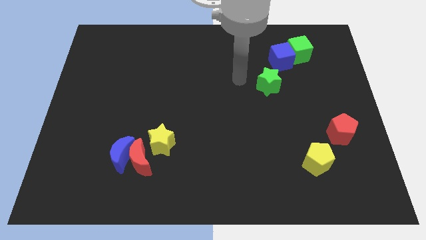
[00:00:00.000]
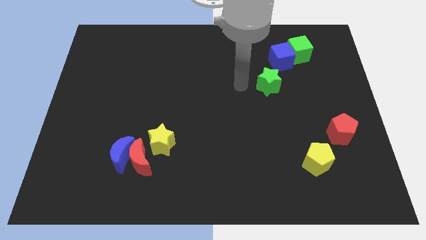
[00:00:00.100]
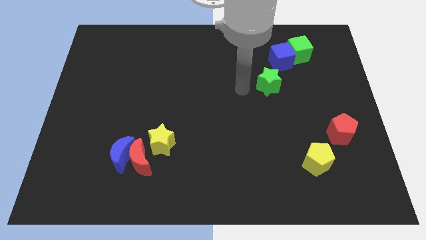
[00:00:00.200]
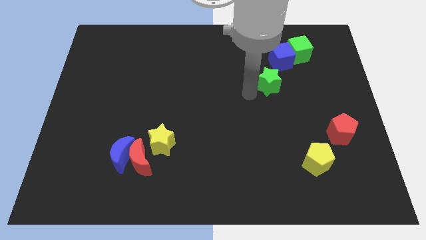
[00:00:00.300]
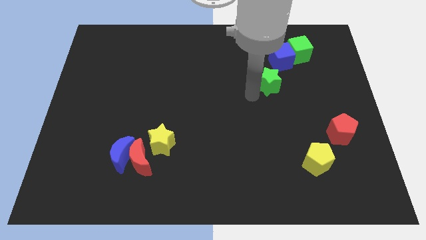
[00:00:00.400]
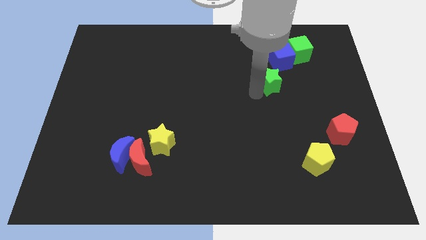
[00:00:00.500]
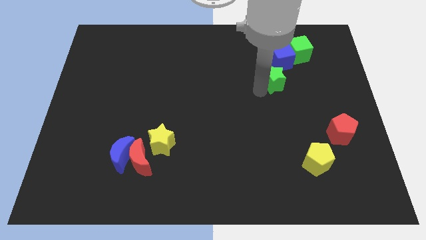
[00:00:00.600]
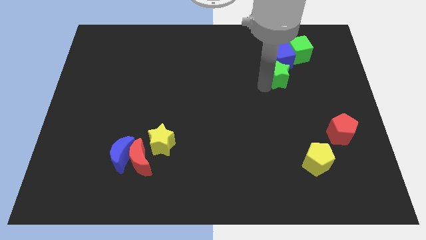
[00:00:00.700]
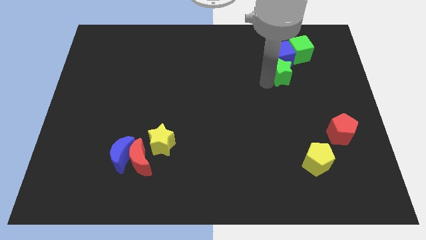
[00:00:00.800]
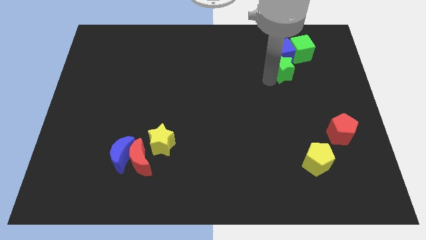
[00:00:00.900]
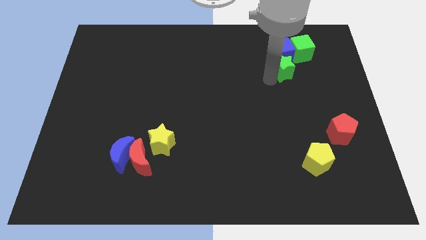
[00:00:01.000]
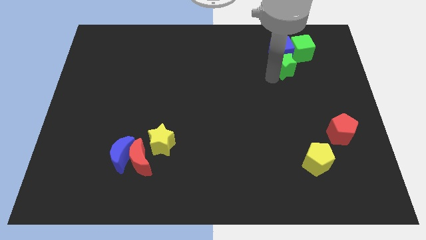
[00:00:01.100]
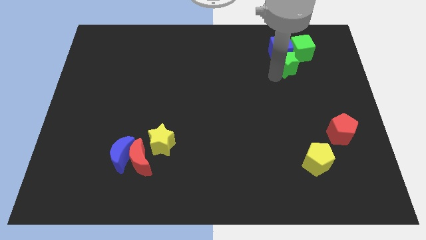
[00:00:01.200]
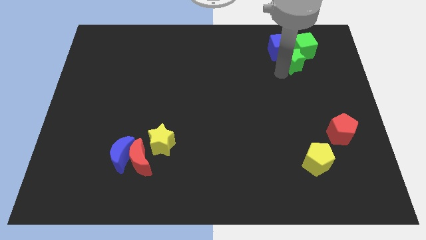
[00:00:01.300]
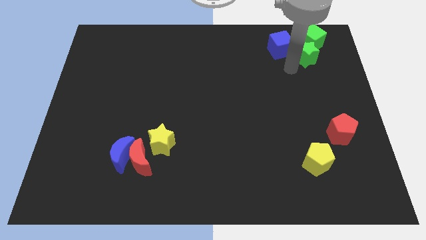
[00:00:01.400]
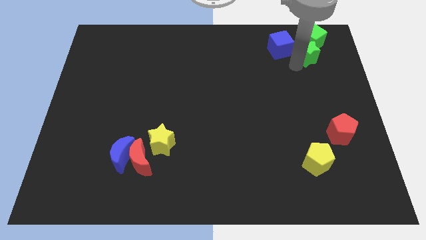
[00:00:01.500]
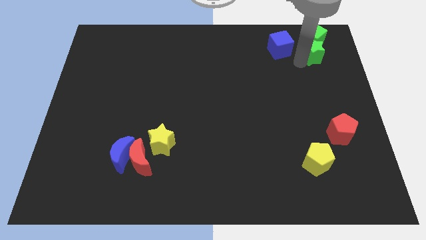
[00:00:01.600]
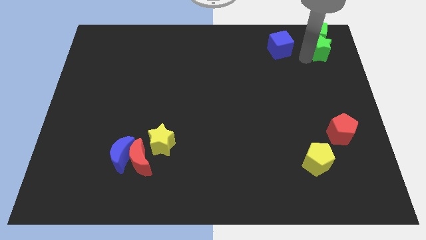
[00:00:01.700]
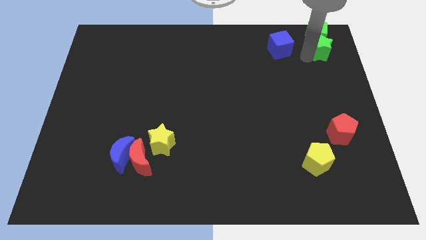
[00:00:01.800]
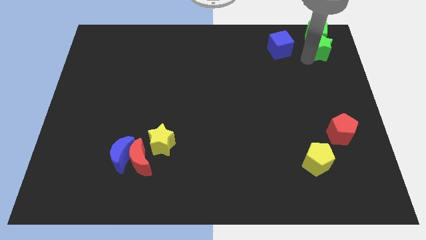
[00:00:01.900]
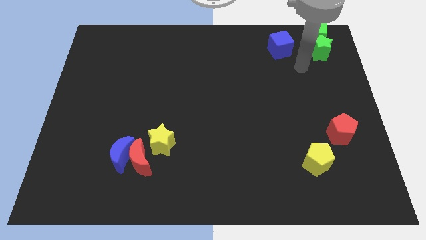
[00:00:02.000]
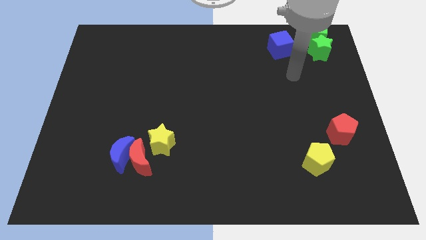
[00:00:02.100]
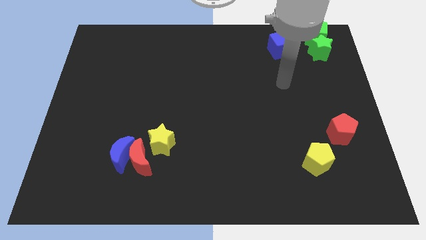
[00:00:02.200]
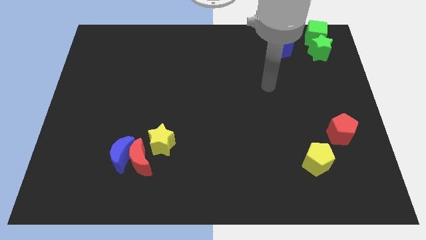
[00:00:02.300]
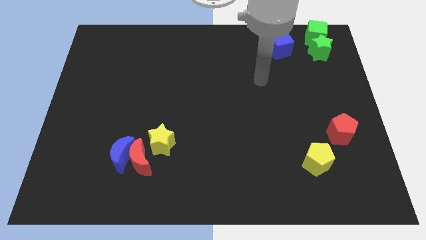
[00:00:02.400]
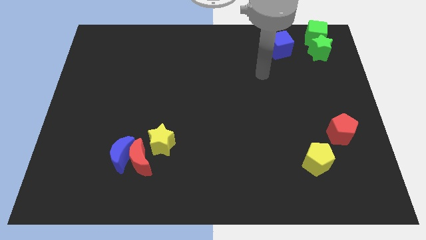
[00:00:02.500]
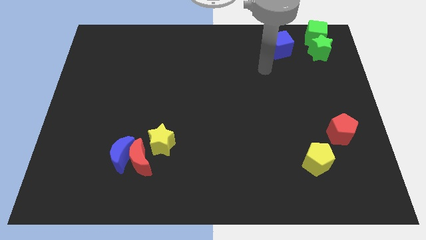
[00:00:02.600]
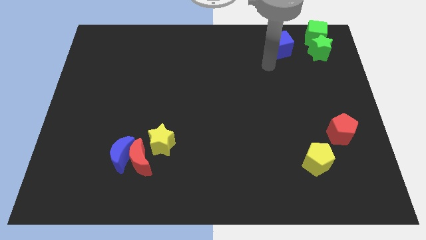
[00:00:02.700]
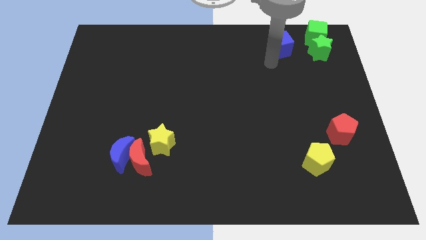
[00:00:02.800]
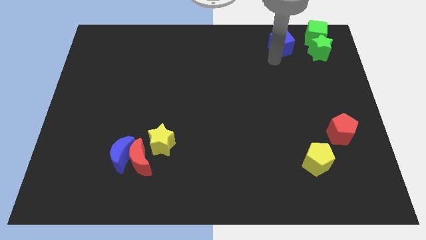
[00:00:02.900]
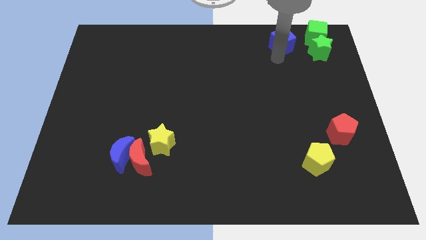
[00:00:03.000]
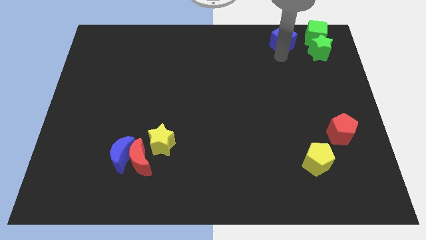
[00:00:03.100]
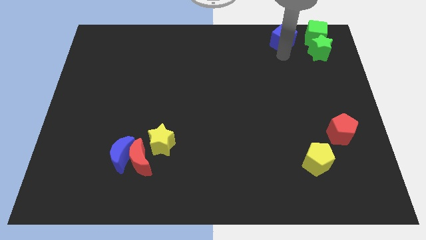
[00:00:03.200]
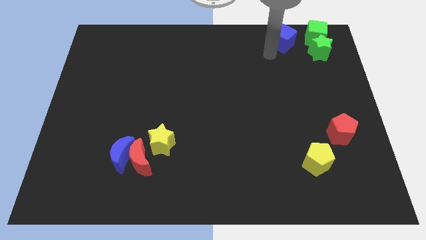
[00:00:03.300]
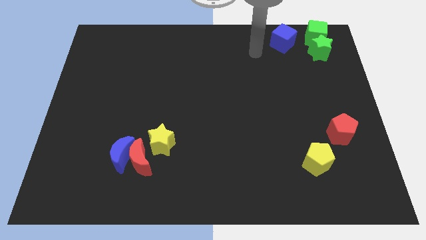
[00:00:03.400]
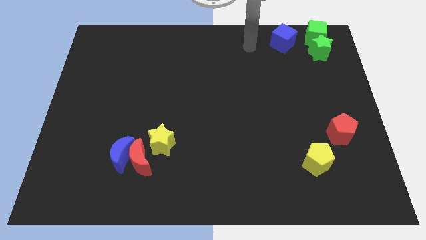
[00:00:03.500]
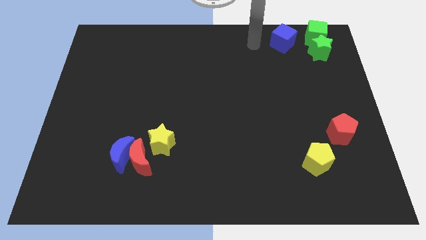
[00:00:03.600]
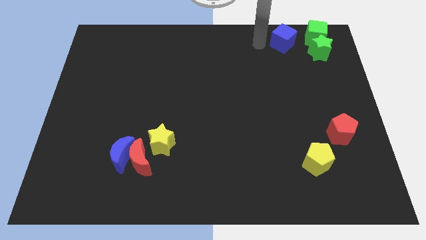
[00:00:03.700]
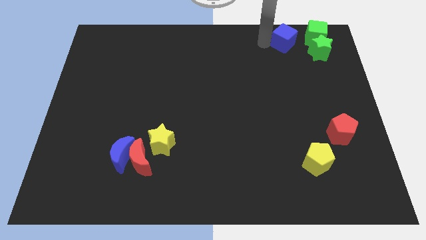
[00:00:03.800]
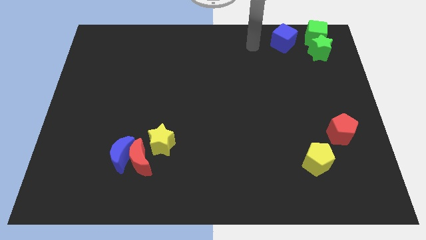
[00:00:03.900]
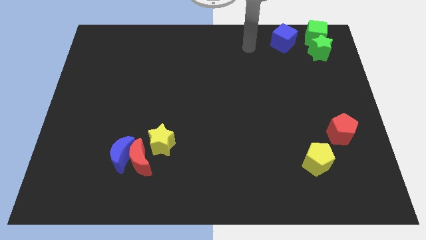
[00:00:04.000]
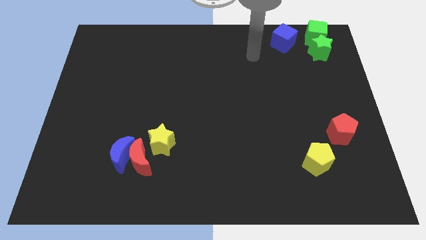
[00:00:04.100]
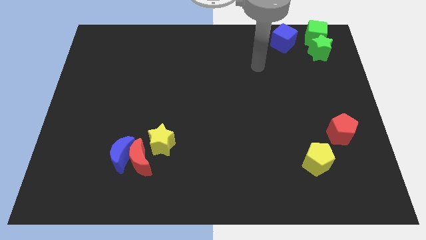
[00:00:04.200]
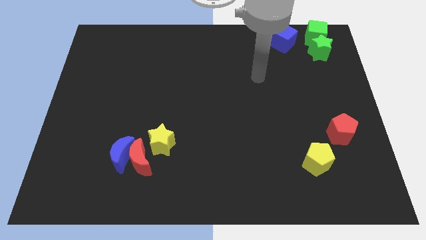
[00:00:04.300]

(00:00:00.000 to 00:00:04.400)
put the blue cube parallel to the left of the green cube

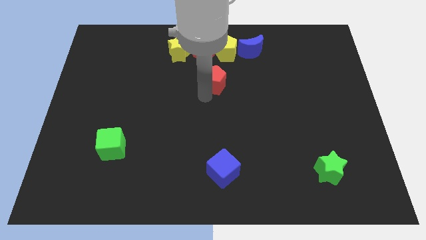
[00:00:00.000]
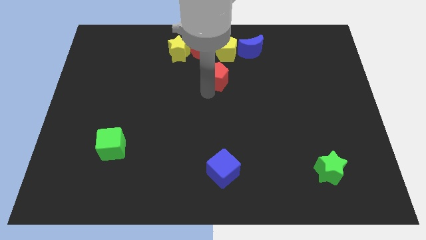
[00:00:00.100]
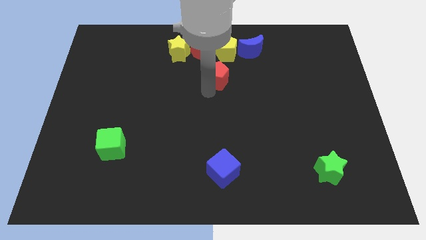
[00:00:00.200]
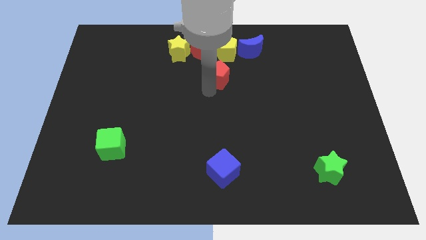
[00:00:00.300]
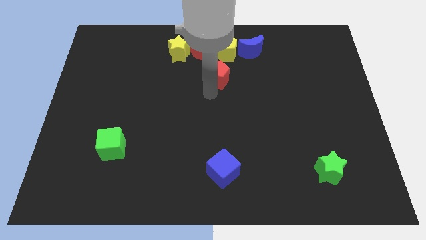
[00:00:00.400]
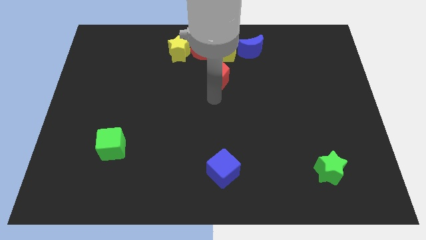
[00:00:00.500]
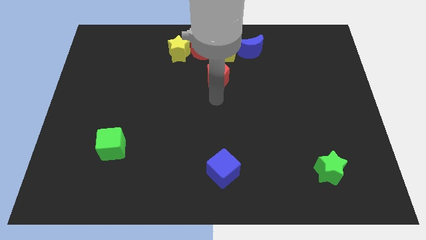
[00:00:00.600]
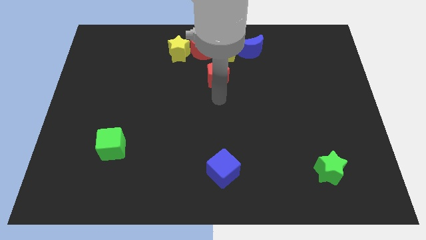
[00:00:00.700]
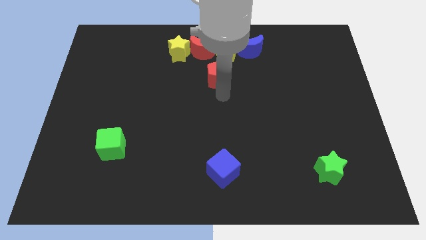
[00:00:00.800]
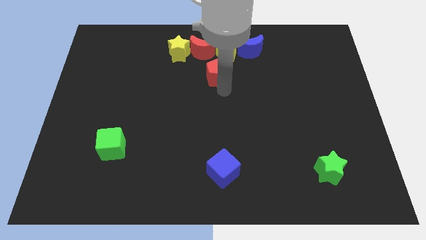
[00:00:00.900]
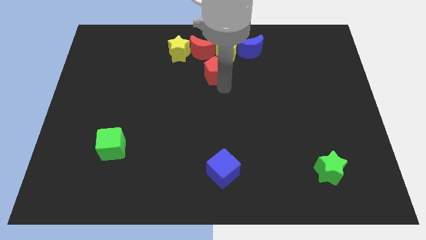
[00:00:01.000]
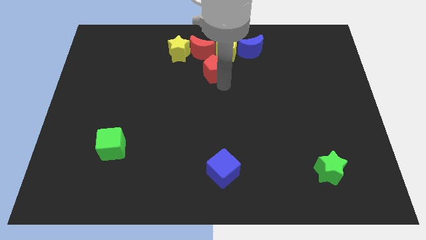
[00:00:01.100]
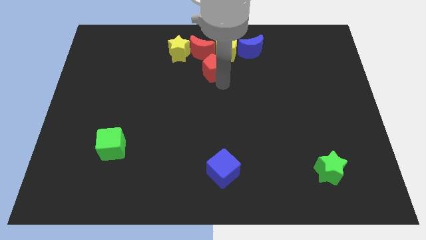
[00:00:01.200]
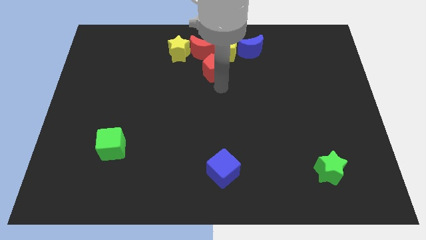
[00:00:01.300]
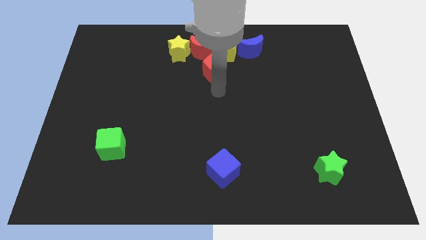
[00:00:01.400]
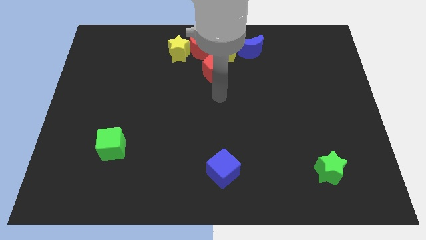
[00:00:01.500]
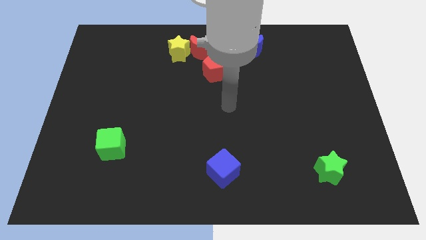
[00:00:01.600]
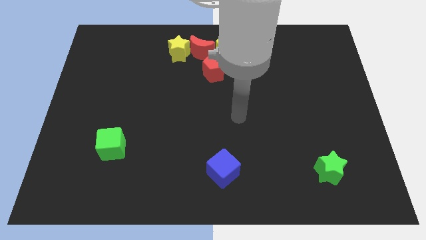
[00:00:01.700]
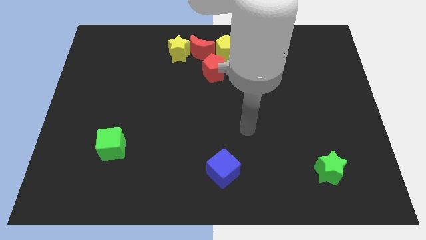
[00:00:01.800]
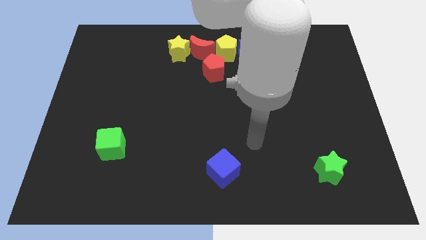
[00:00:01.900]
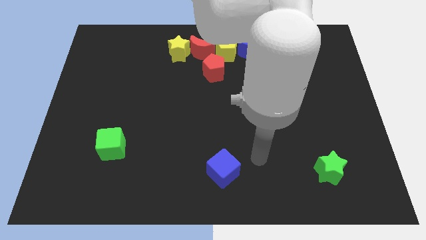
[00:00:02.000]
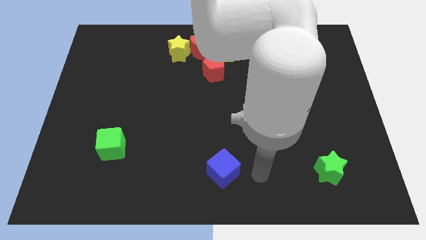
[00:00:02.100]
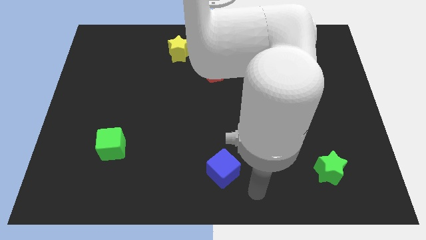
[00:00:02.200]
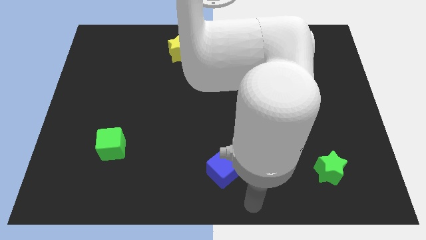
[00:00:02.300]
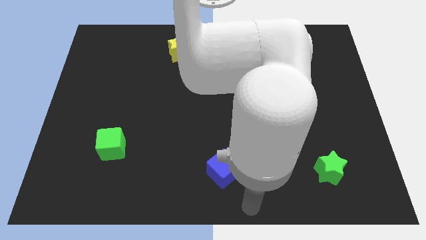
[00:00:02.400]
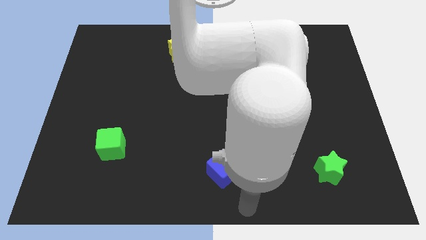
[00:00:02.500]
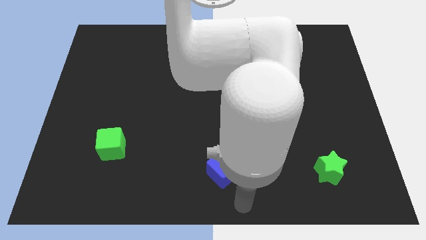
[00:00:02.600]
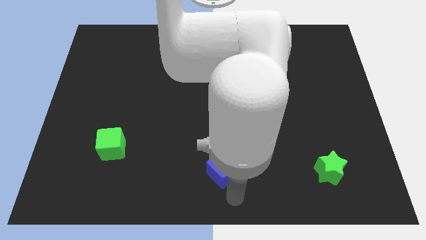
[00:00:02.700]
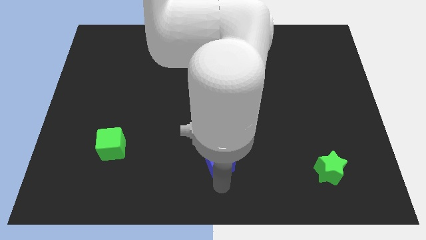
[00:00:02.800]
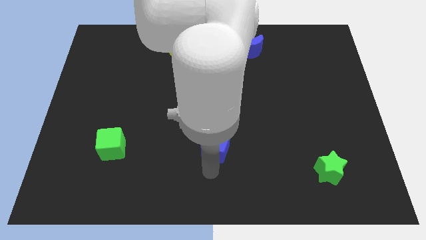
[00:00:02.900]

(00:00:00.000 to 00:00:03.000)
move the arm below blue cube

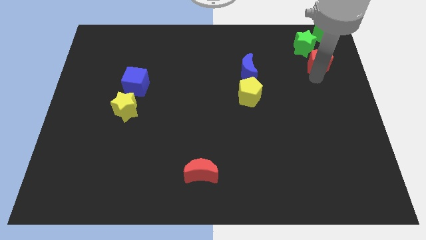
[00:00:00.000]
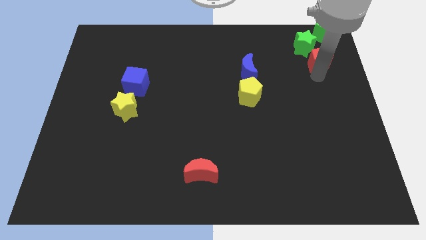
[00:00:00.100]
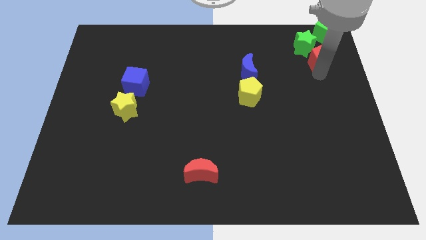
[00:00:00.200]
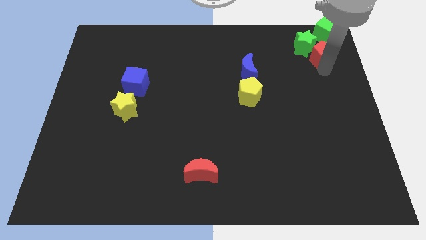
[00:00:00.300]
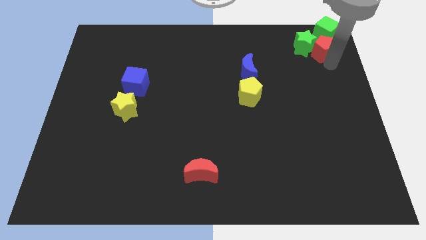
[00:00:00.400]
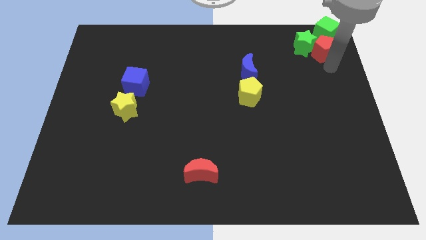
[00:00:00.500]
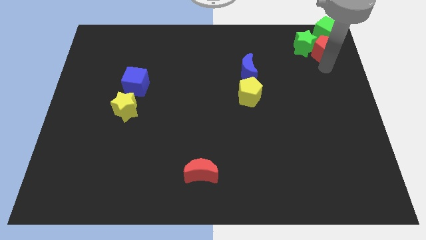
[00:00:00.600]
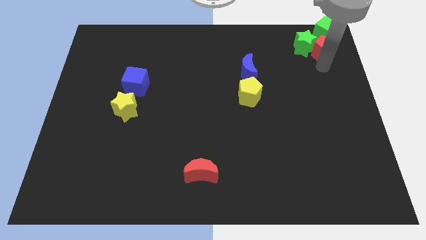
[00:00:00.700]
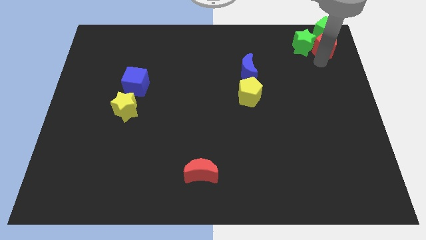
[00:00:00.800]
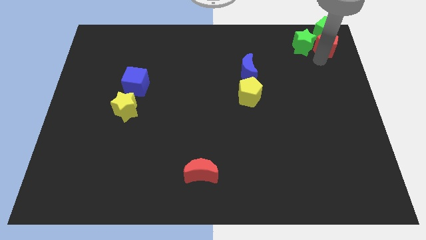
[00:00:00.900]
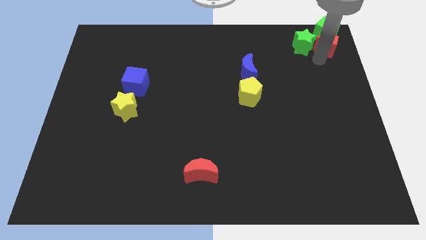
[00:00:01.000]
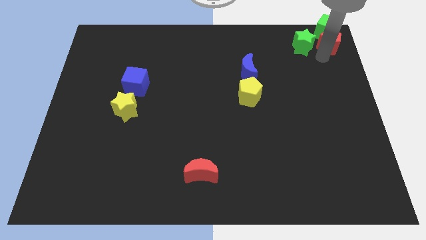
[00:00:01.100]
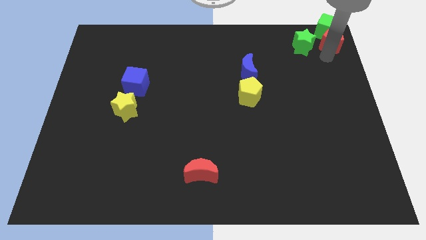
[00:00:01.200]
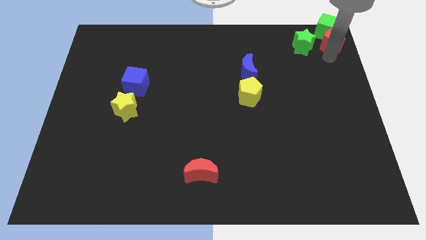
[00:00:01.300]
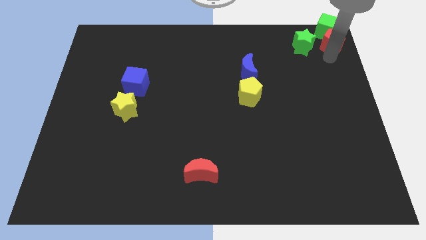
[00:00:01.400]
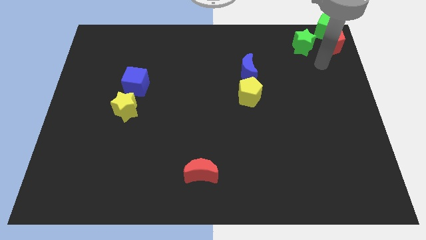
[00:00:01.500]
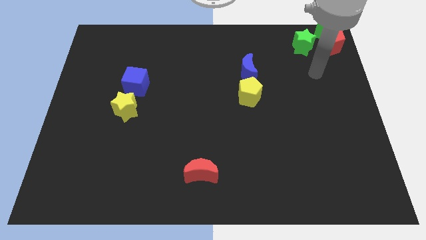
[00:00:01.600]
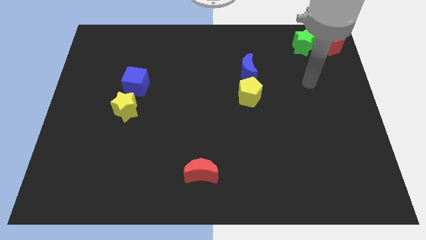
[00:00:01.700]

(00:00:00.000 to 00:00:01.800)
slide the red pentagon into the green cube
